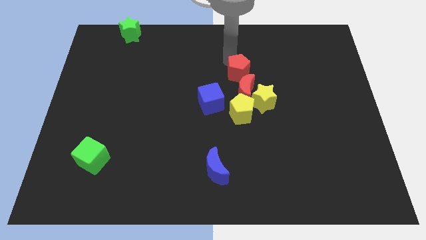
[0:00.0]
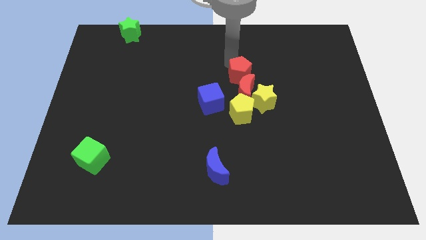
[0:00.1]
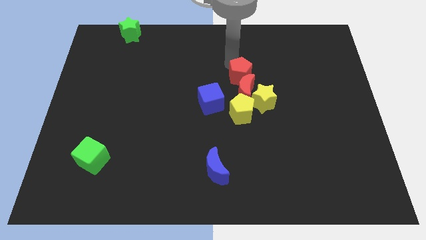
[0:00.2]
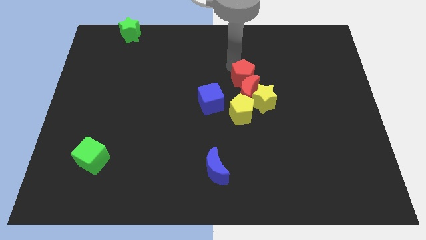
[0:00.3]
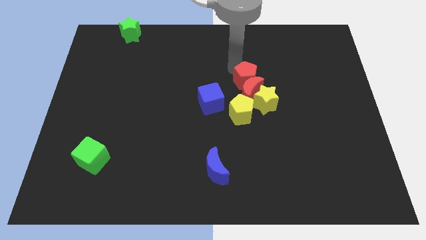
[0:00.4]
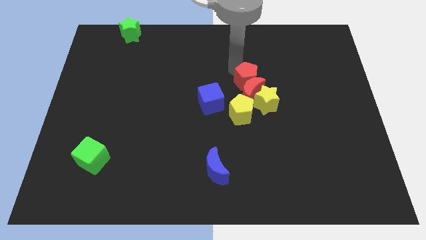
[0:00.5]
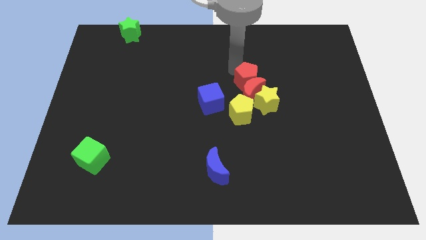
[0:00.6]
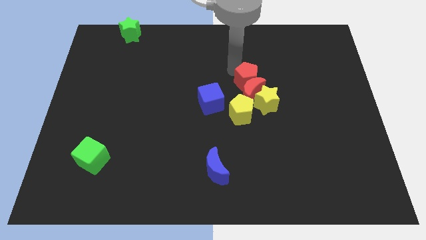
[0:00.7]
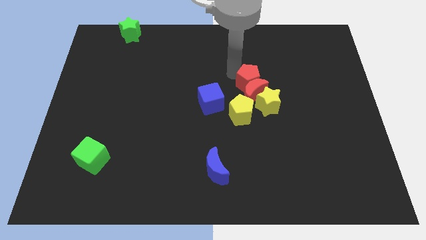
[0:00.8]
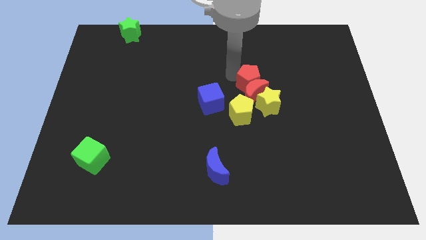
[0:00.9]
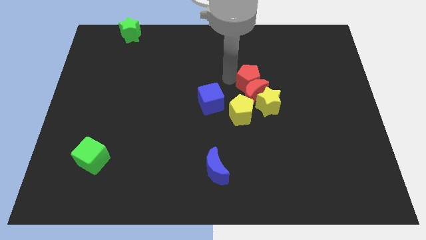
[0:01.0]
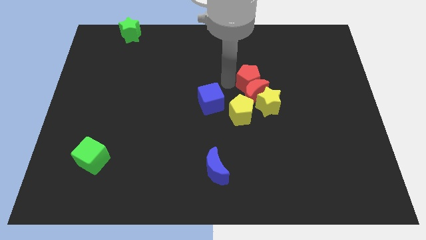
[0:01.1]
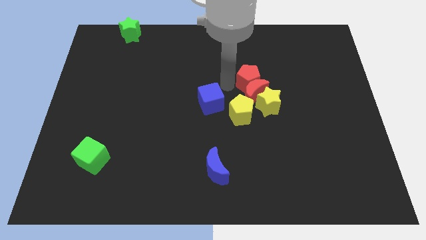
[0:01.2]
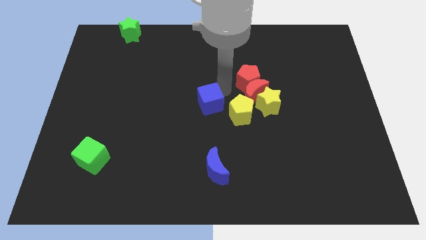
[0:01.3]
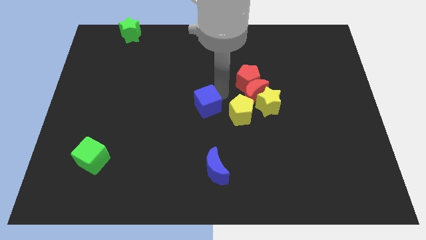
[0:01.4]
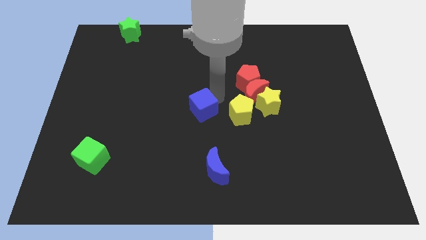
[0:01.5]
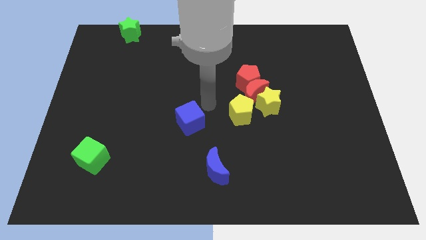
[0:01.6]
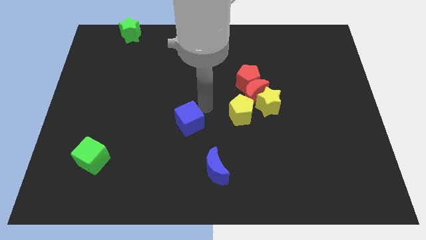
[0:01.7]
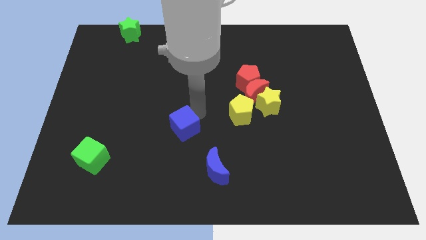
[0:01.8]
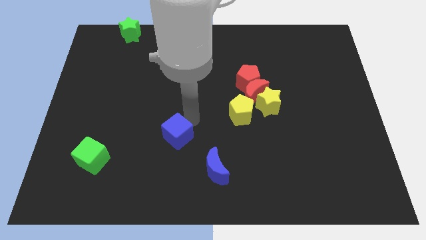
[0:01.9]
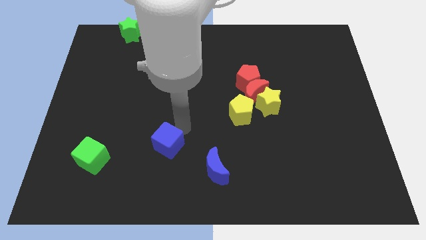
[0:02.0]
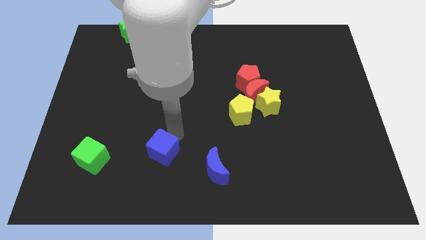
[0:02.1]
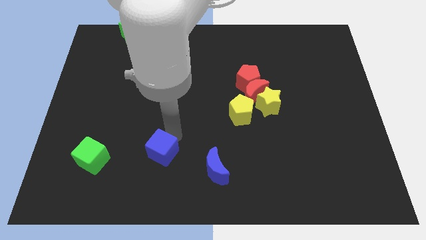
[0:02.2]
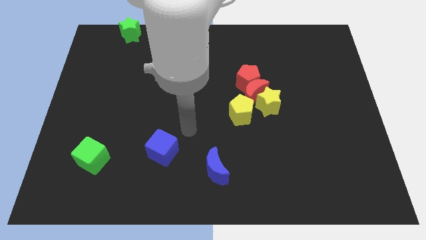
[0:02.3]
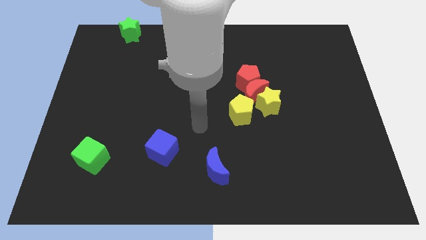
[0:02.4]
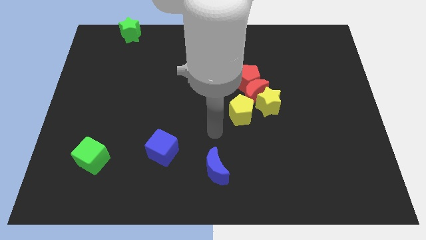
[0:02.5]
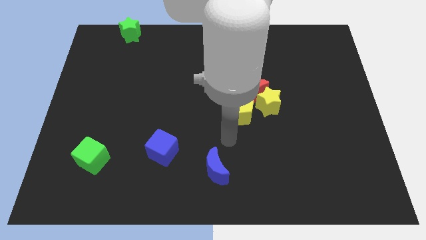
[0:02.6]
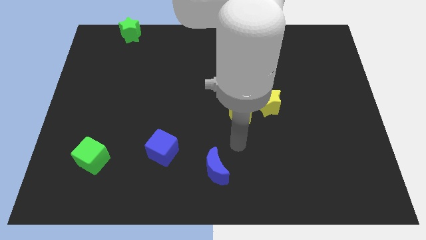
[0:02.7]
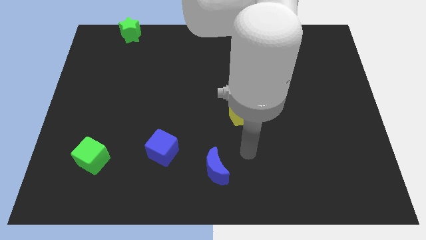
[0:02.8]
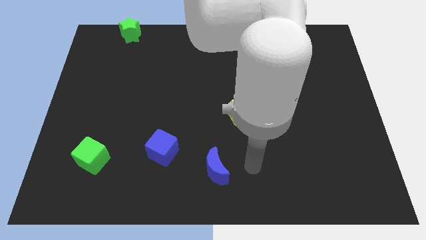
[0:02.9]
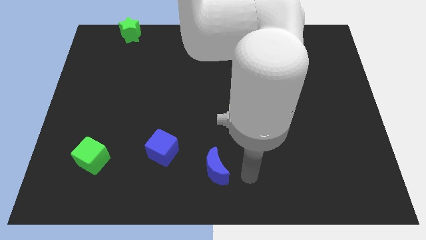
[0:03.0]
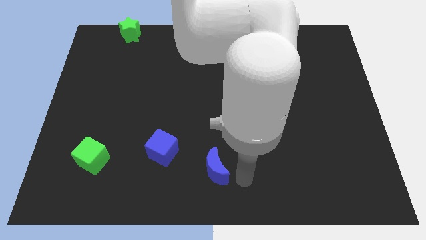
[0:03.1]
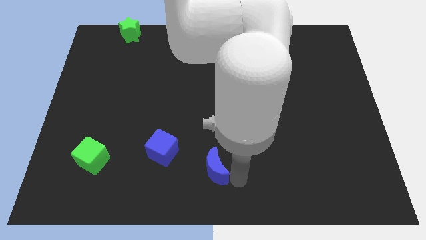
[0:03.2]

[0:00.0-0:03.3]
place the arm to the right of the blue moon

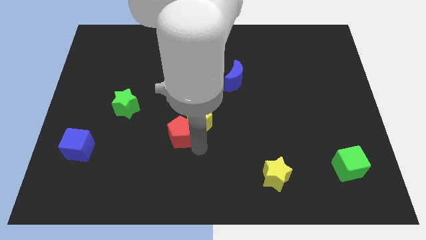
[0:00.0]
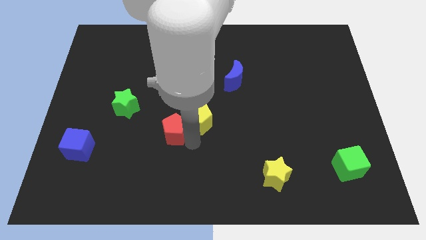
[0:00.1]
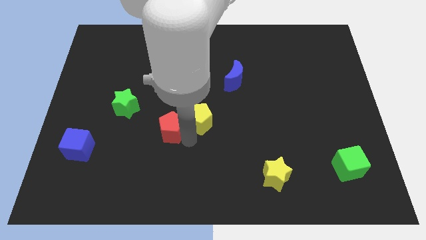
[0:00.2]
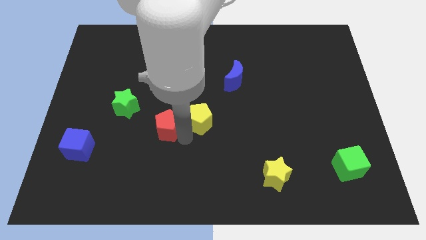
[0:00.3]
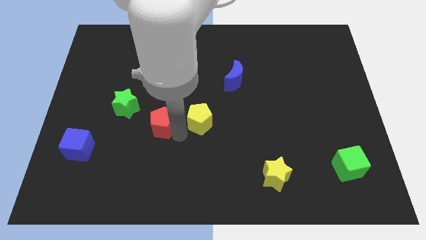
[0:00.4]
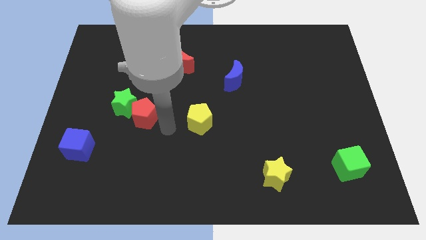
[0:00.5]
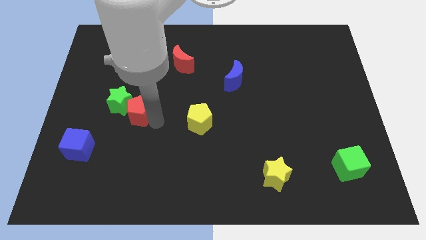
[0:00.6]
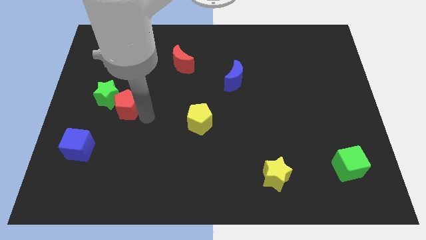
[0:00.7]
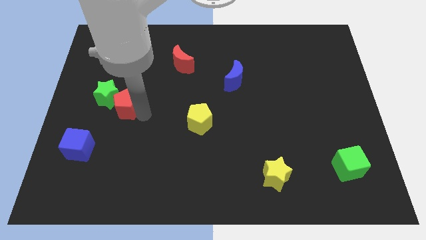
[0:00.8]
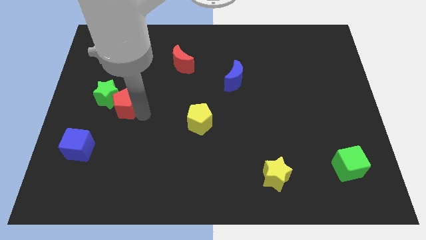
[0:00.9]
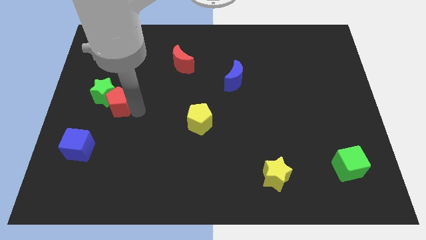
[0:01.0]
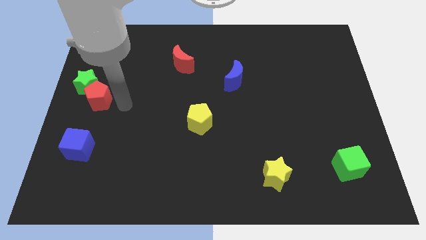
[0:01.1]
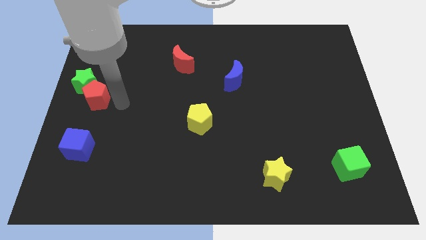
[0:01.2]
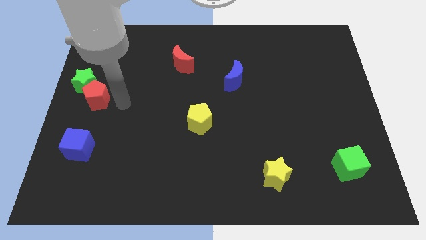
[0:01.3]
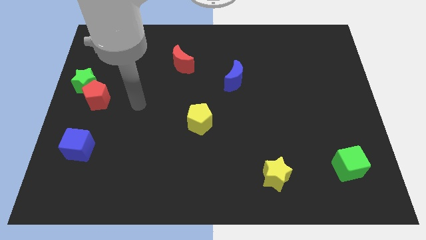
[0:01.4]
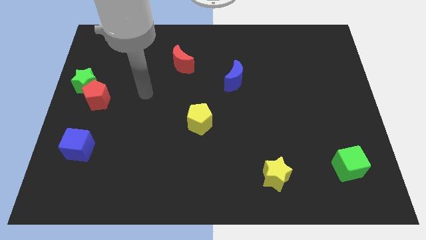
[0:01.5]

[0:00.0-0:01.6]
push the red pentagon and green star towards the left side

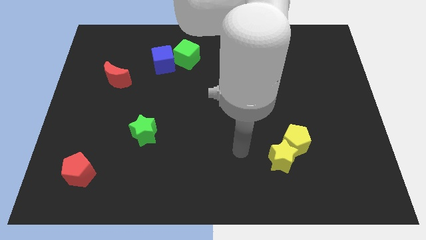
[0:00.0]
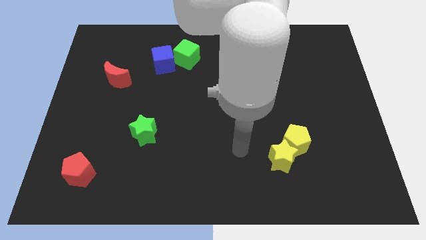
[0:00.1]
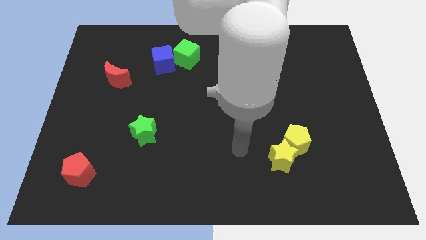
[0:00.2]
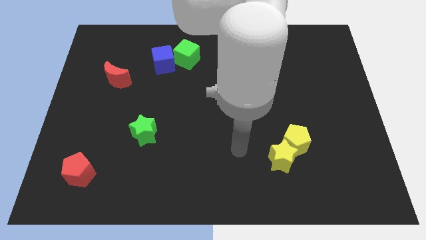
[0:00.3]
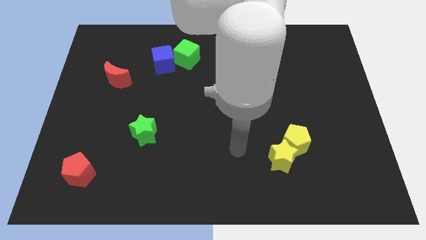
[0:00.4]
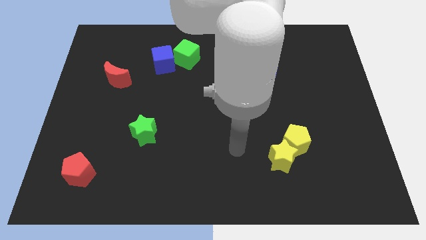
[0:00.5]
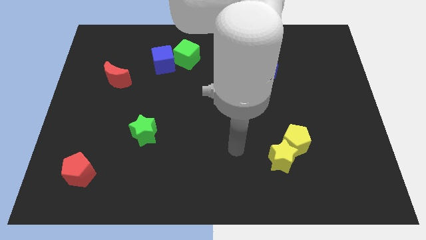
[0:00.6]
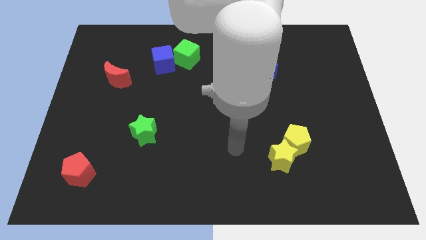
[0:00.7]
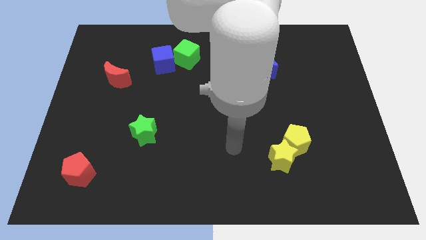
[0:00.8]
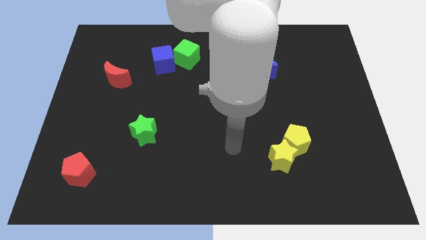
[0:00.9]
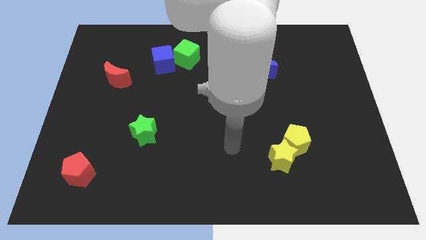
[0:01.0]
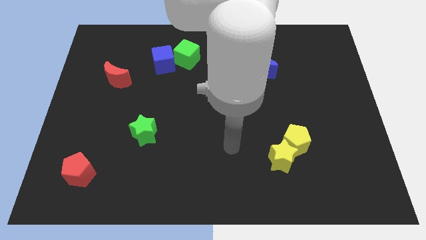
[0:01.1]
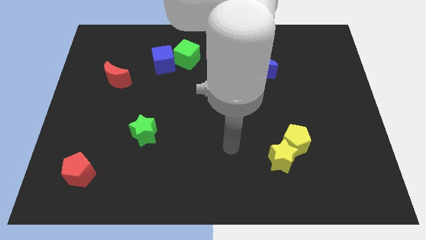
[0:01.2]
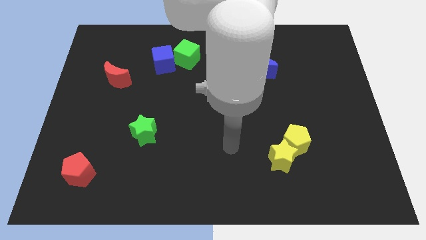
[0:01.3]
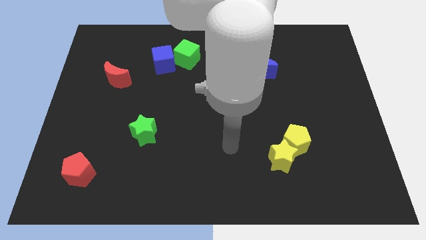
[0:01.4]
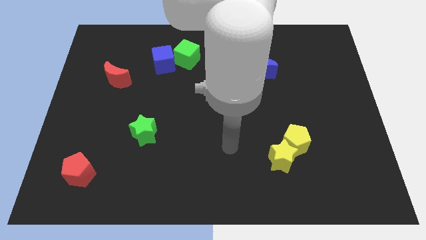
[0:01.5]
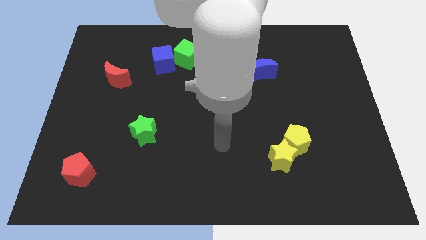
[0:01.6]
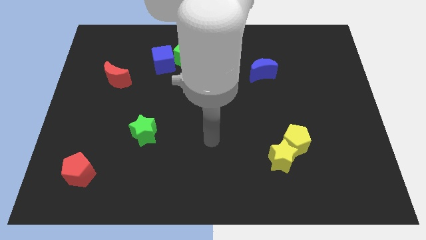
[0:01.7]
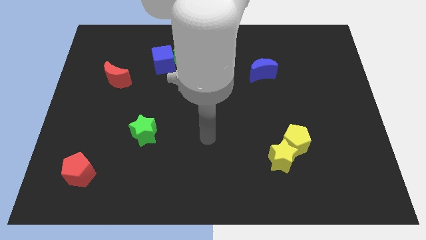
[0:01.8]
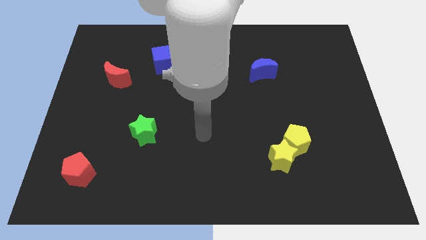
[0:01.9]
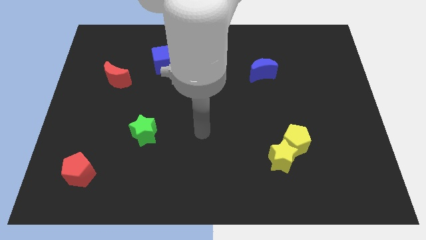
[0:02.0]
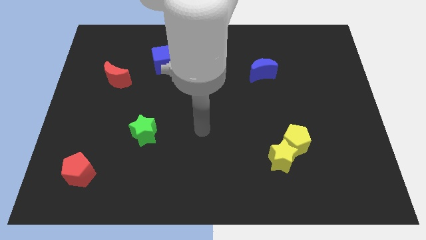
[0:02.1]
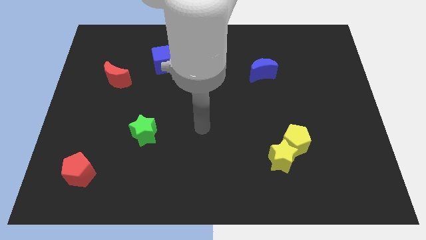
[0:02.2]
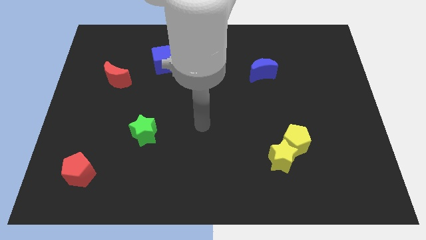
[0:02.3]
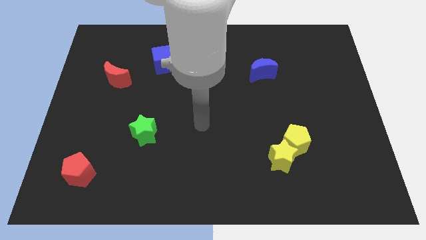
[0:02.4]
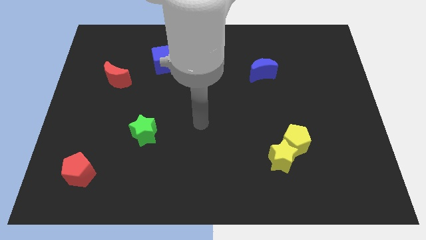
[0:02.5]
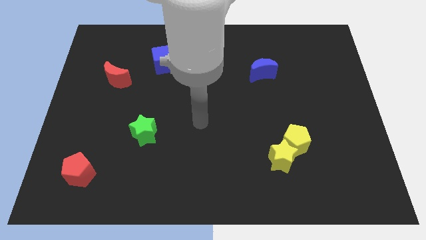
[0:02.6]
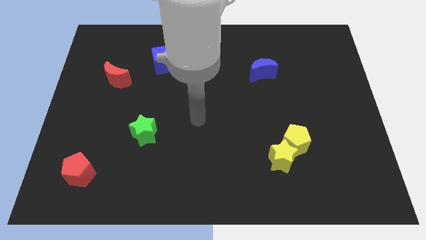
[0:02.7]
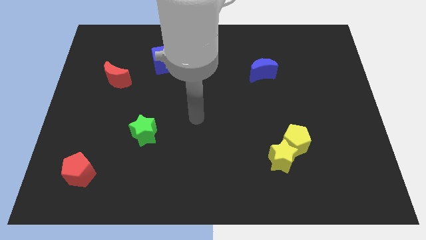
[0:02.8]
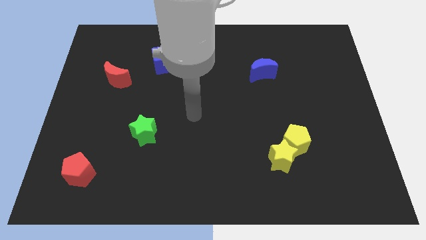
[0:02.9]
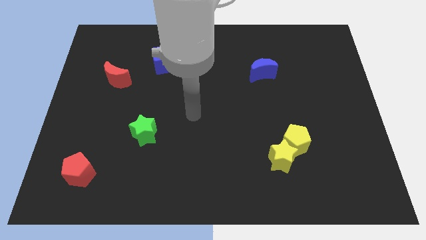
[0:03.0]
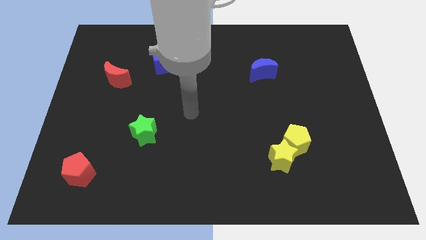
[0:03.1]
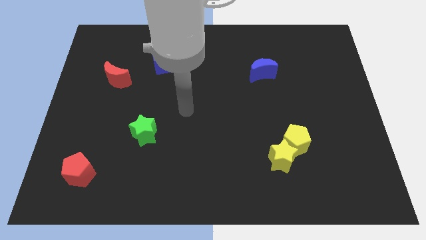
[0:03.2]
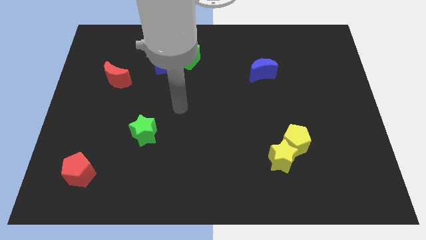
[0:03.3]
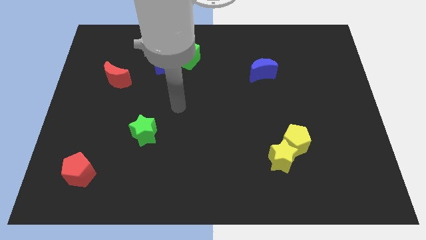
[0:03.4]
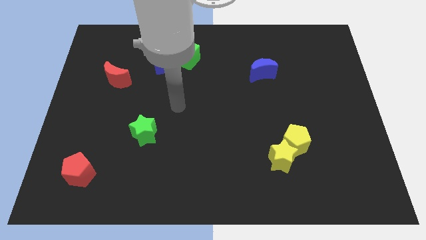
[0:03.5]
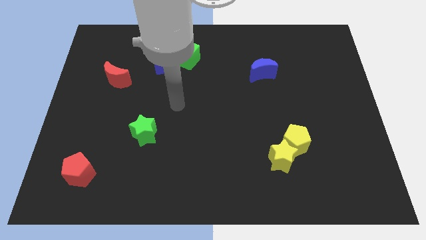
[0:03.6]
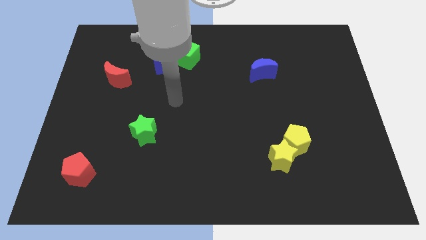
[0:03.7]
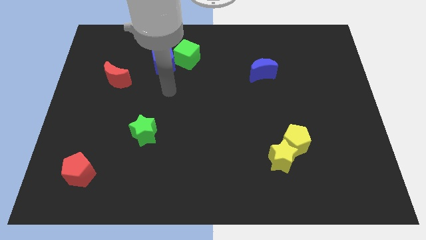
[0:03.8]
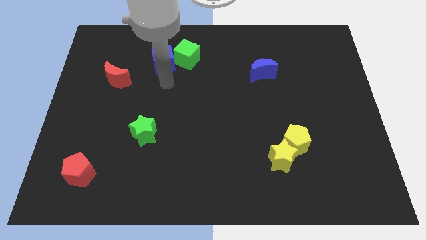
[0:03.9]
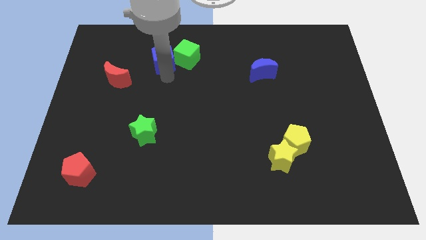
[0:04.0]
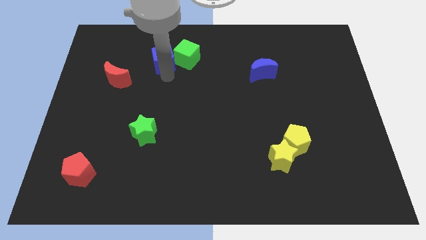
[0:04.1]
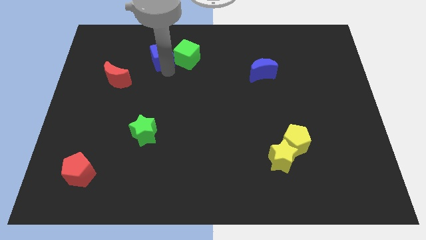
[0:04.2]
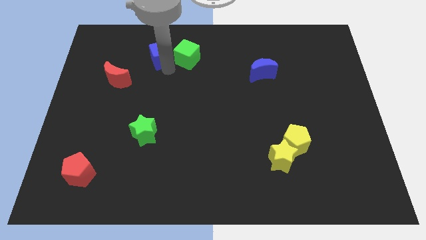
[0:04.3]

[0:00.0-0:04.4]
go near blue cube
